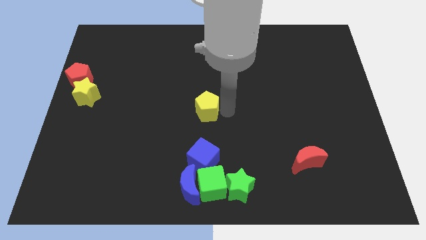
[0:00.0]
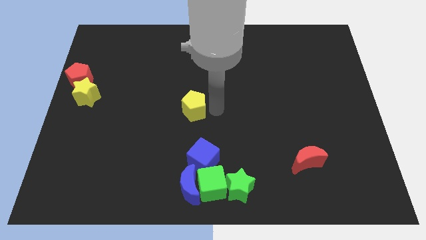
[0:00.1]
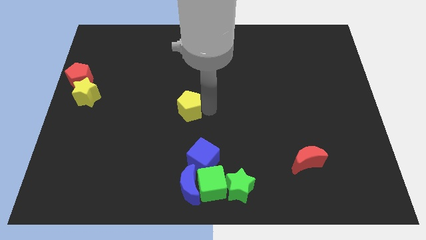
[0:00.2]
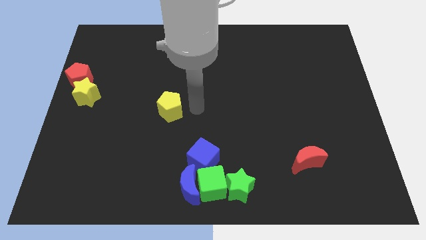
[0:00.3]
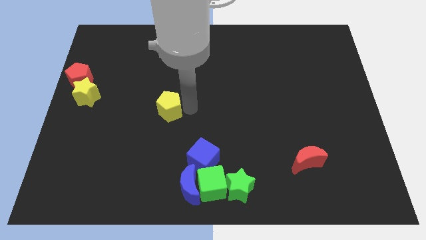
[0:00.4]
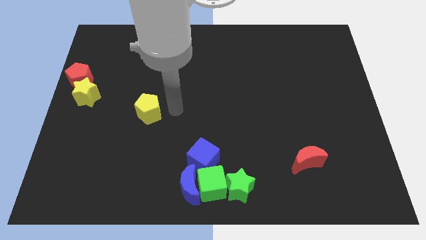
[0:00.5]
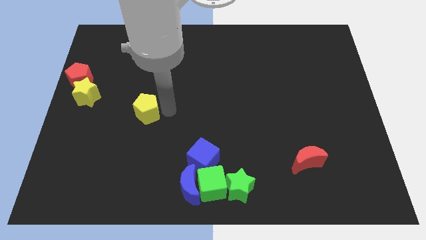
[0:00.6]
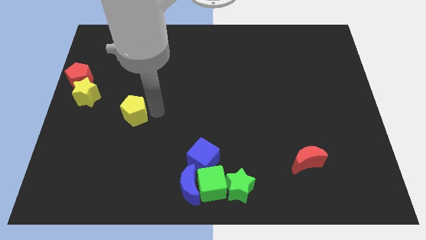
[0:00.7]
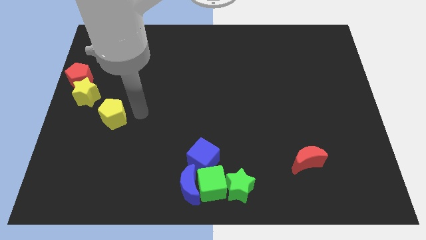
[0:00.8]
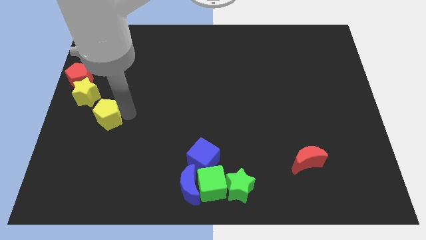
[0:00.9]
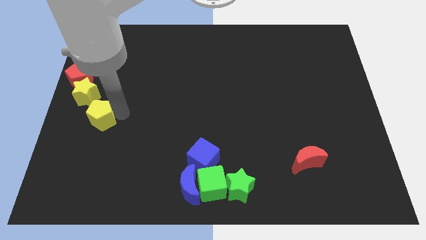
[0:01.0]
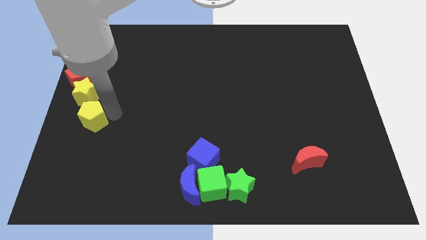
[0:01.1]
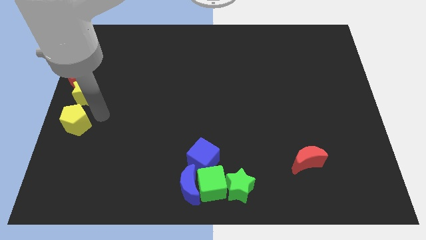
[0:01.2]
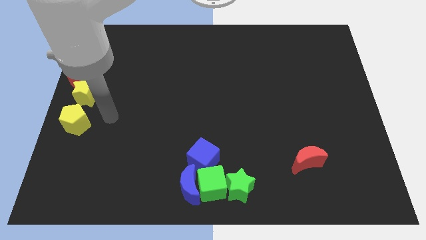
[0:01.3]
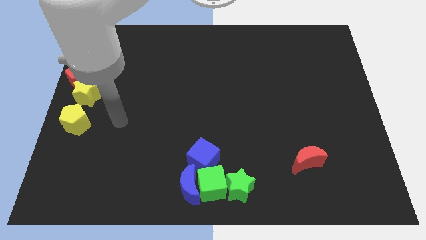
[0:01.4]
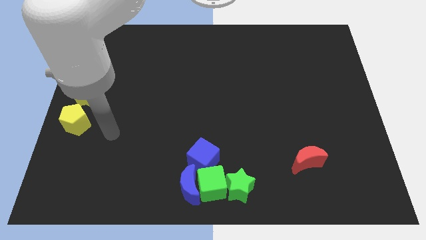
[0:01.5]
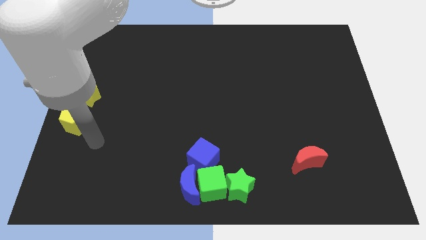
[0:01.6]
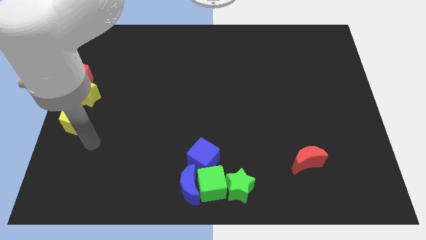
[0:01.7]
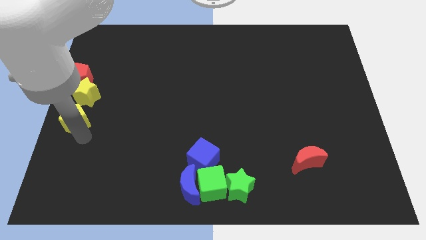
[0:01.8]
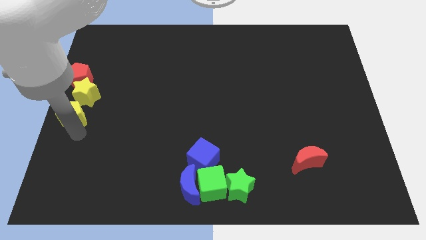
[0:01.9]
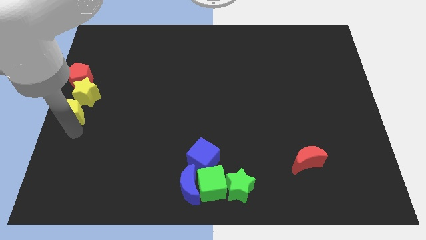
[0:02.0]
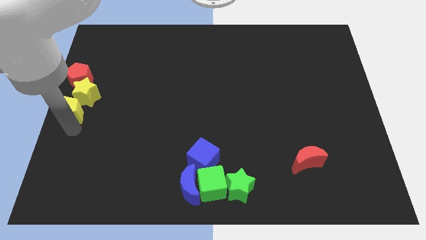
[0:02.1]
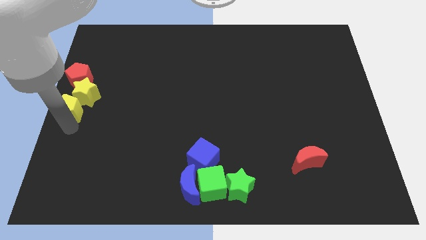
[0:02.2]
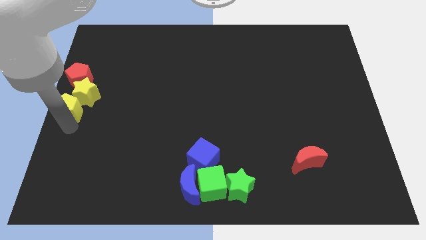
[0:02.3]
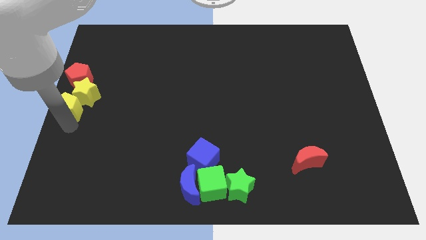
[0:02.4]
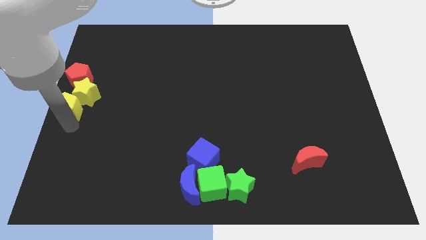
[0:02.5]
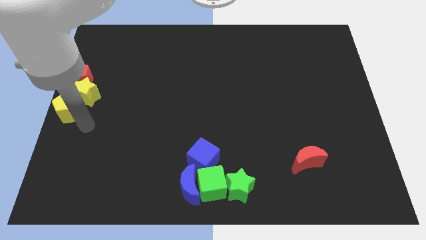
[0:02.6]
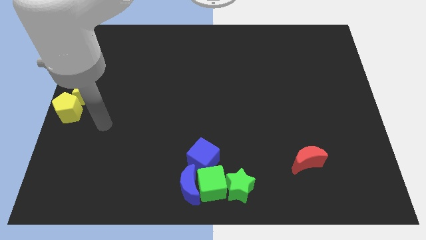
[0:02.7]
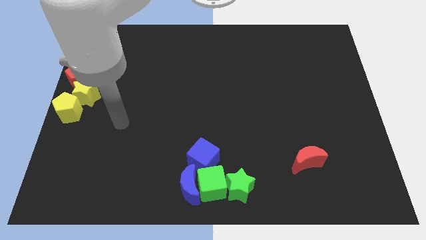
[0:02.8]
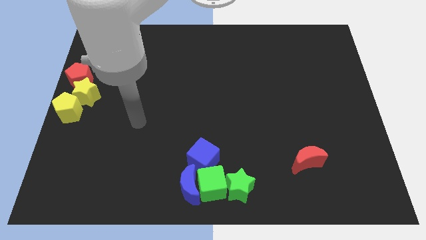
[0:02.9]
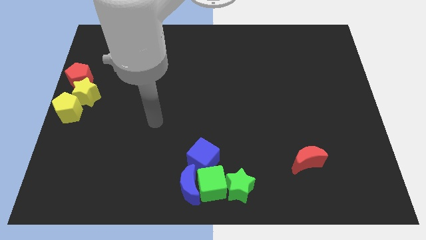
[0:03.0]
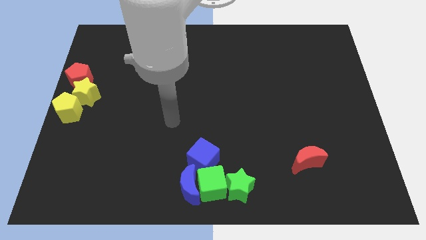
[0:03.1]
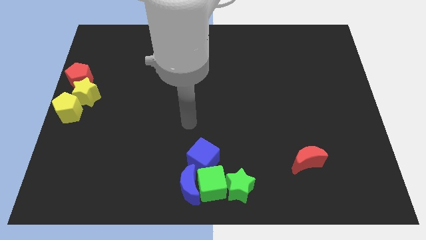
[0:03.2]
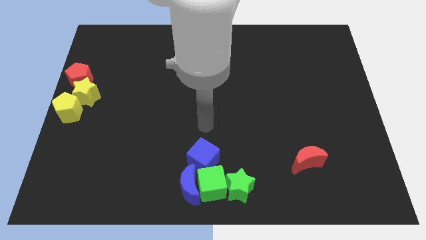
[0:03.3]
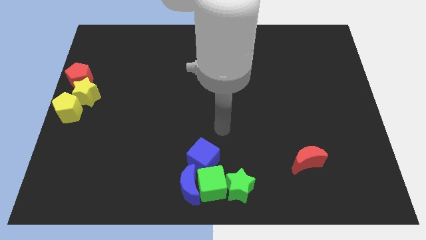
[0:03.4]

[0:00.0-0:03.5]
slide the yellow pentagon to the bottom left side of the yellow star

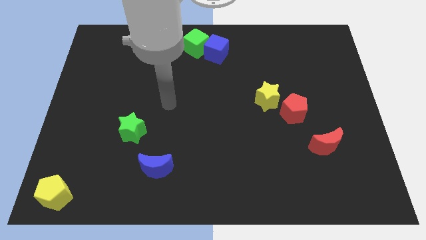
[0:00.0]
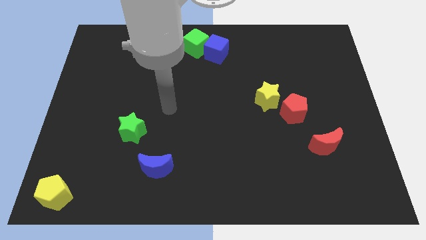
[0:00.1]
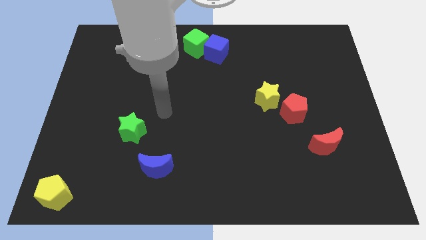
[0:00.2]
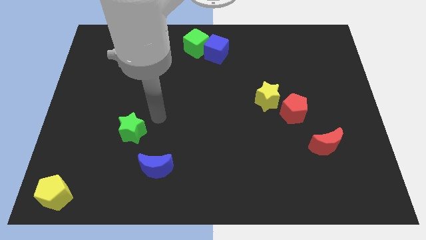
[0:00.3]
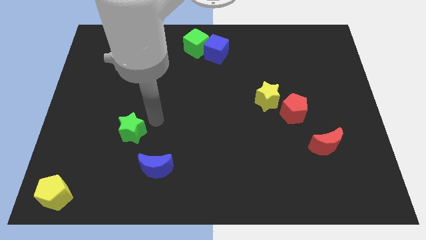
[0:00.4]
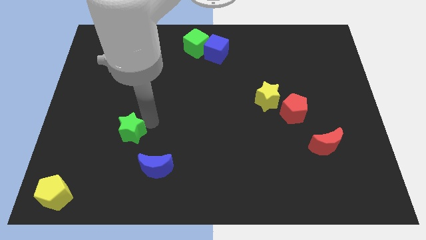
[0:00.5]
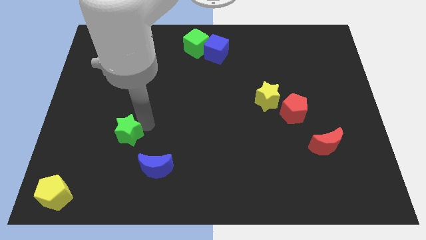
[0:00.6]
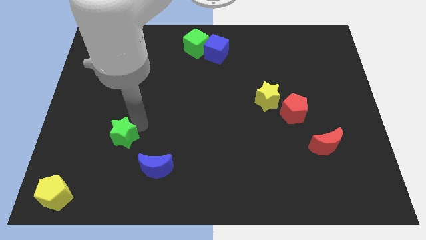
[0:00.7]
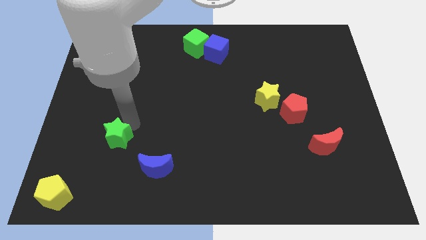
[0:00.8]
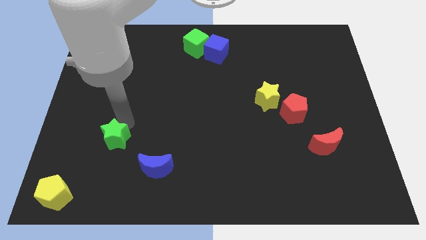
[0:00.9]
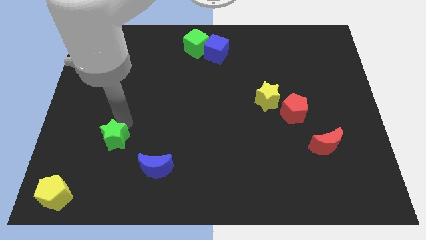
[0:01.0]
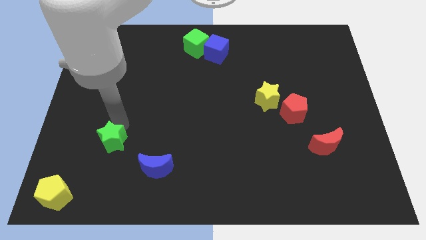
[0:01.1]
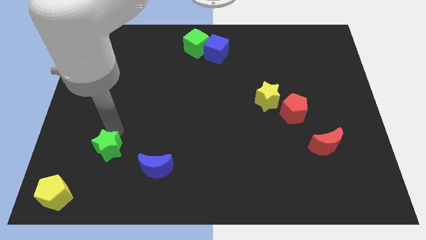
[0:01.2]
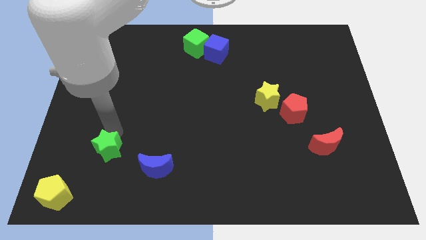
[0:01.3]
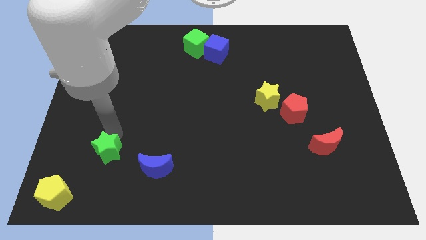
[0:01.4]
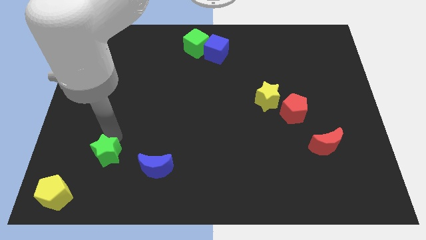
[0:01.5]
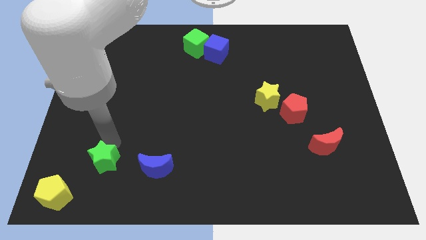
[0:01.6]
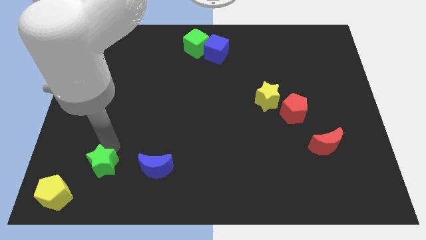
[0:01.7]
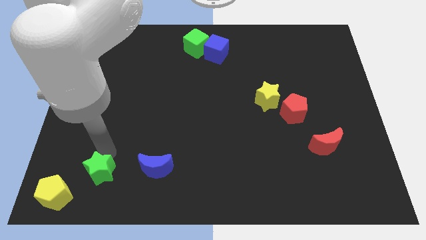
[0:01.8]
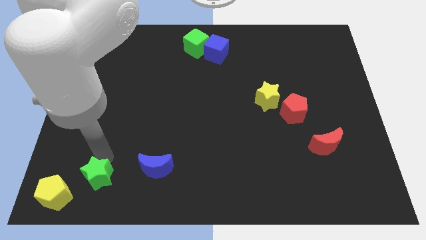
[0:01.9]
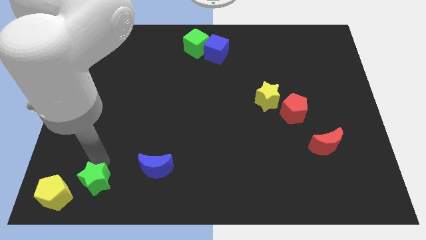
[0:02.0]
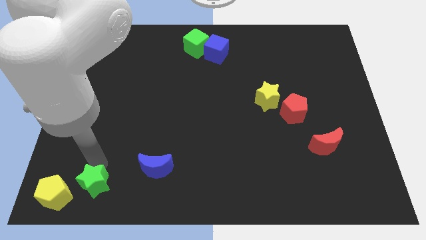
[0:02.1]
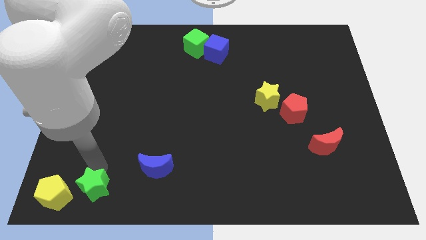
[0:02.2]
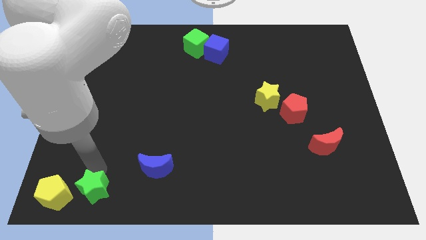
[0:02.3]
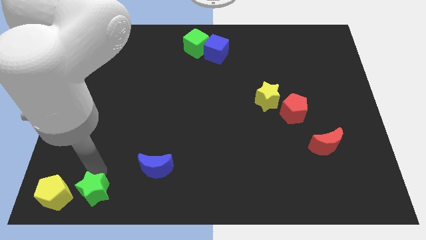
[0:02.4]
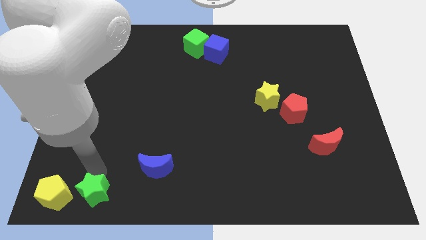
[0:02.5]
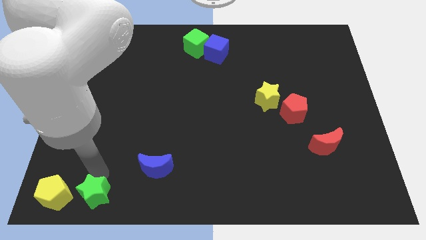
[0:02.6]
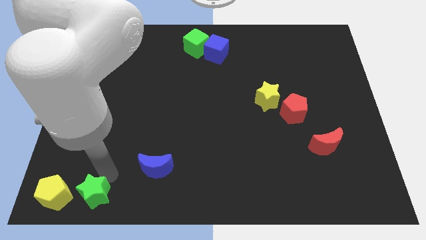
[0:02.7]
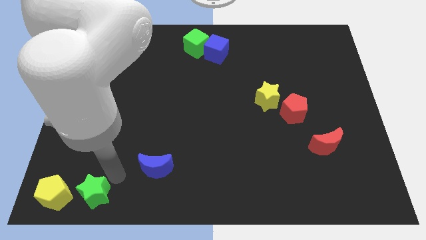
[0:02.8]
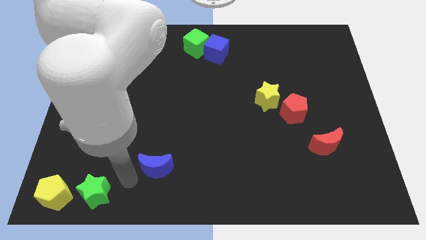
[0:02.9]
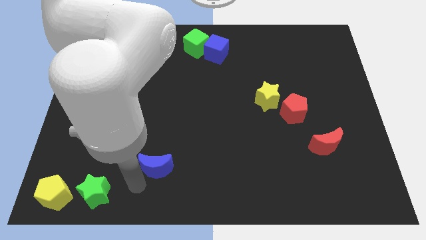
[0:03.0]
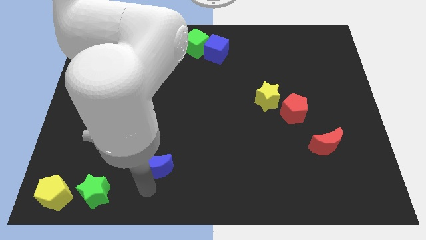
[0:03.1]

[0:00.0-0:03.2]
put the green star on the right side of the yellow pentagon

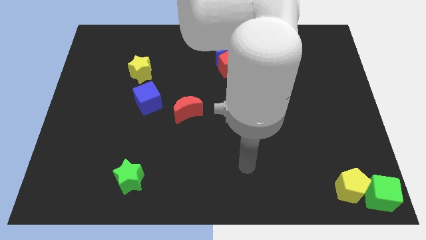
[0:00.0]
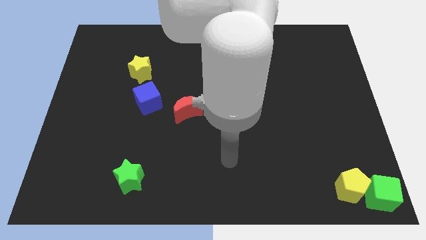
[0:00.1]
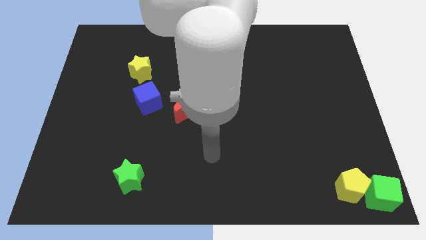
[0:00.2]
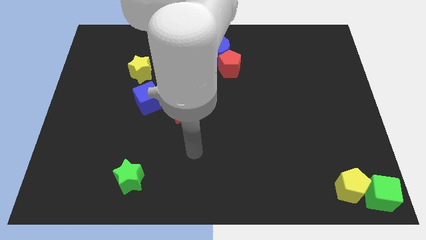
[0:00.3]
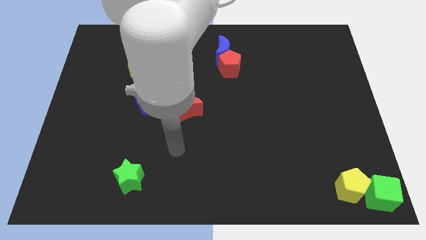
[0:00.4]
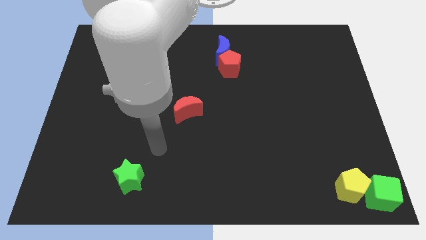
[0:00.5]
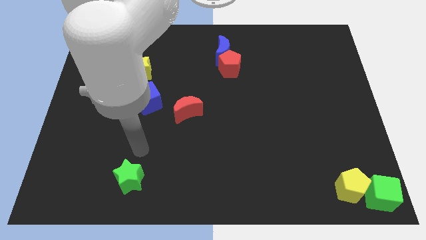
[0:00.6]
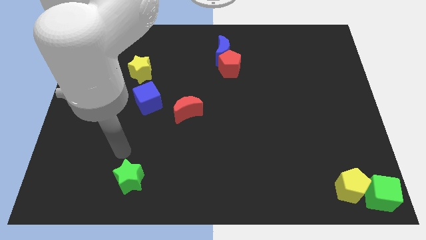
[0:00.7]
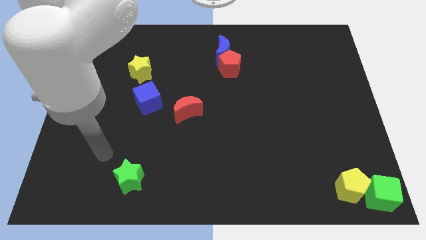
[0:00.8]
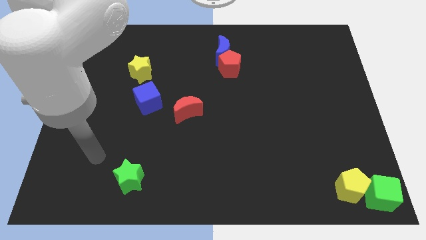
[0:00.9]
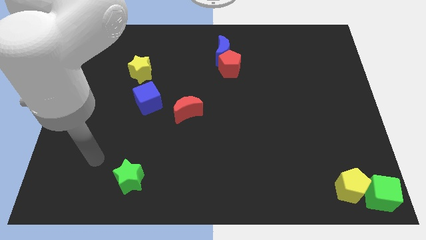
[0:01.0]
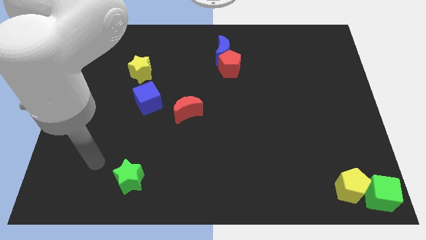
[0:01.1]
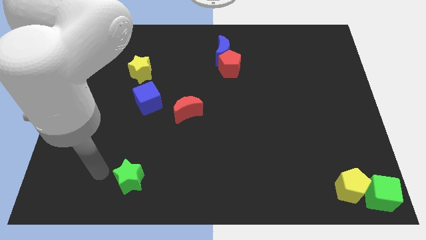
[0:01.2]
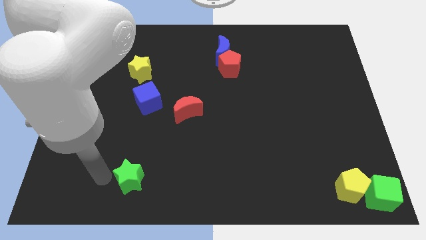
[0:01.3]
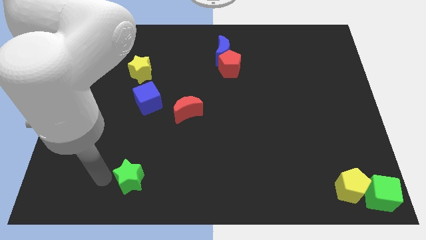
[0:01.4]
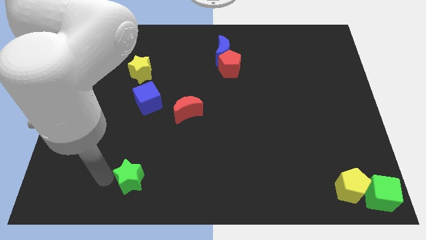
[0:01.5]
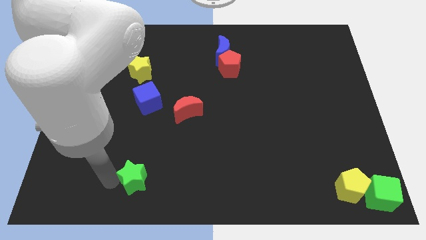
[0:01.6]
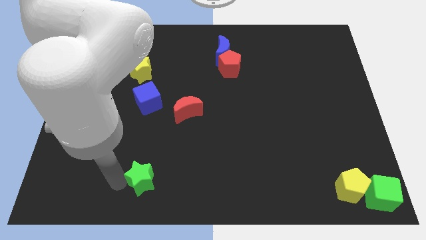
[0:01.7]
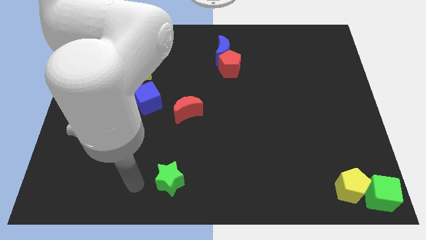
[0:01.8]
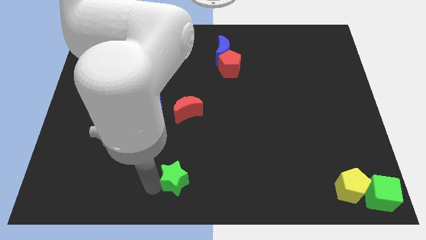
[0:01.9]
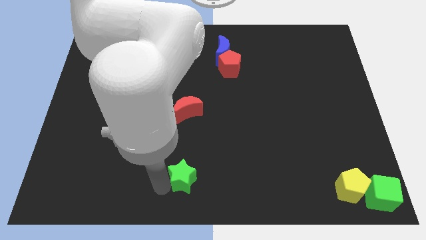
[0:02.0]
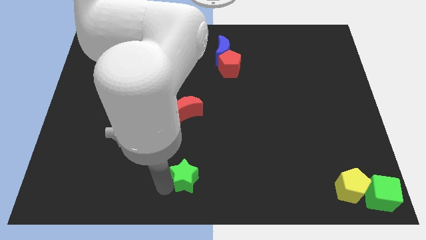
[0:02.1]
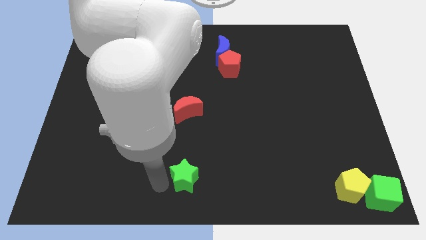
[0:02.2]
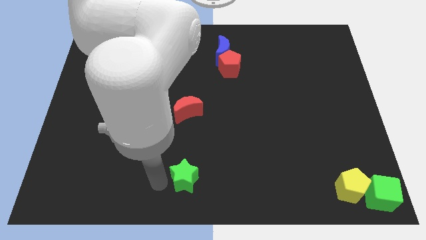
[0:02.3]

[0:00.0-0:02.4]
push green star below red crescent
